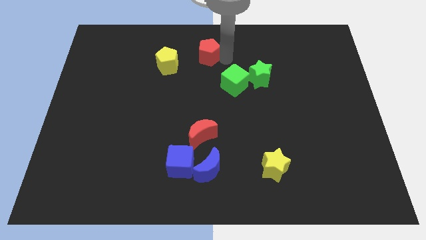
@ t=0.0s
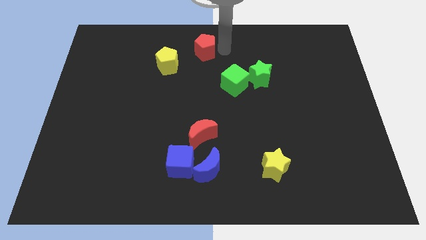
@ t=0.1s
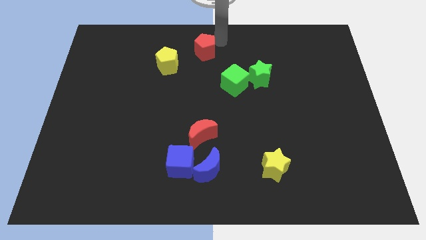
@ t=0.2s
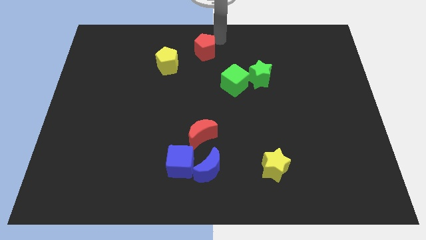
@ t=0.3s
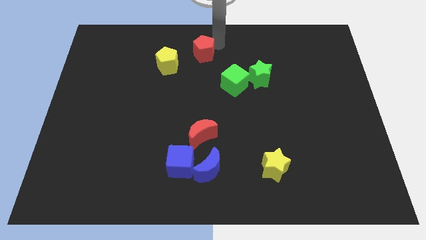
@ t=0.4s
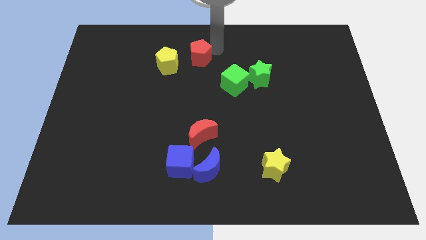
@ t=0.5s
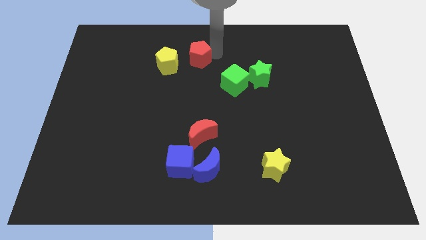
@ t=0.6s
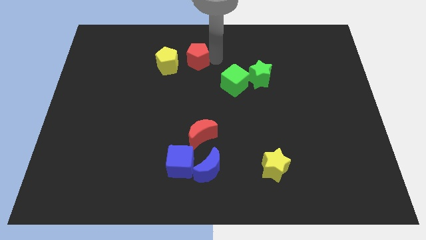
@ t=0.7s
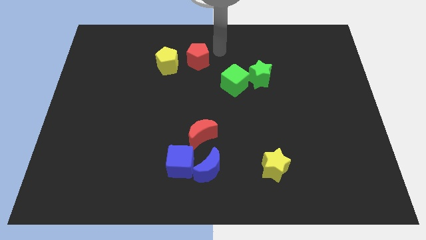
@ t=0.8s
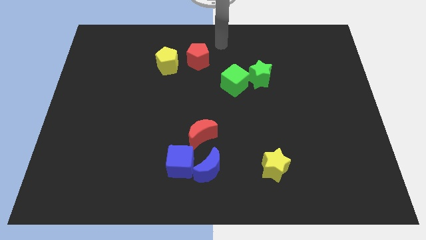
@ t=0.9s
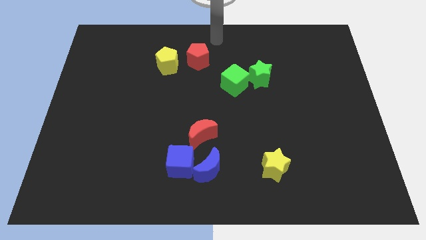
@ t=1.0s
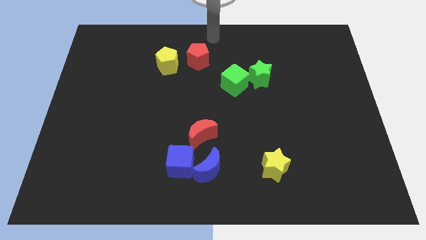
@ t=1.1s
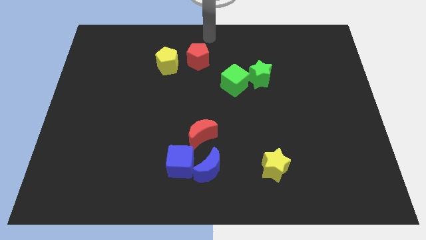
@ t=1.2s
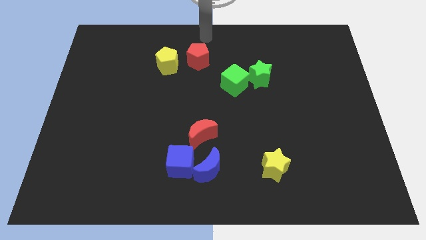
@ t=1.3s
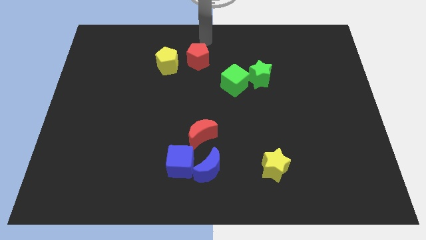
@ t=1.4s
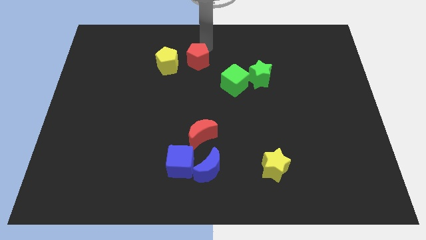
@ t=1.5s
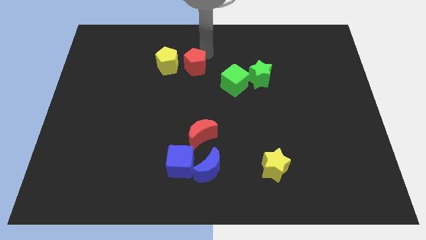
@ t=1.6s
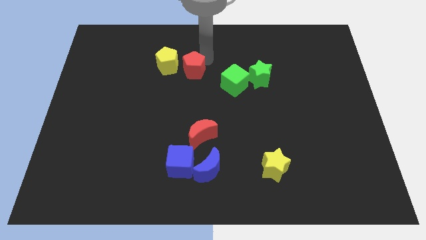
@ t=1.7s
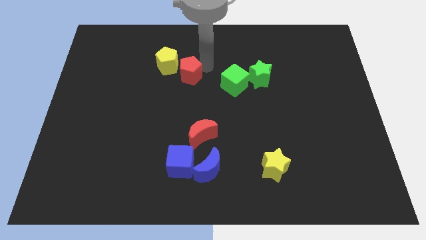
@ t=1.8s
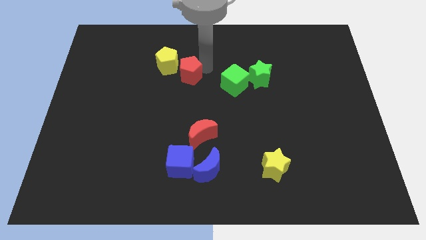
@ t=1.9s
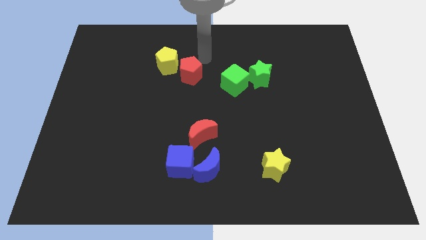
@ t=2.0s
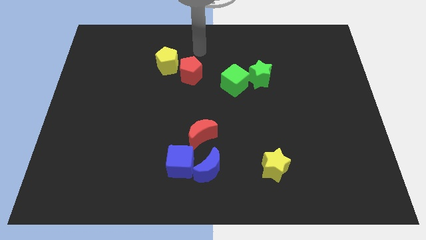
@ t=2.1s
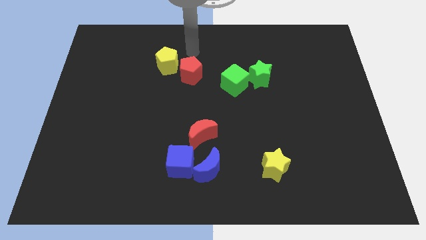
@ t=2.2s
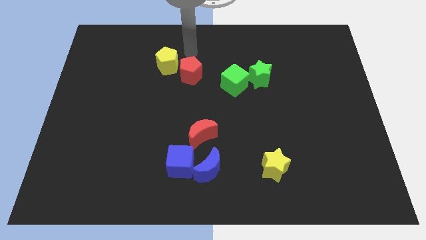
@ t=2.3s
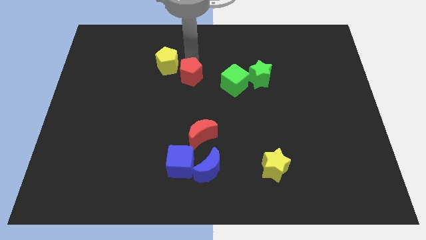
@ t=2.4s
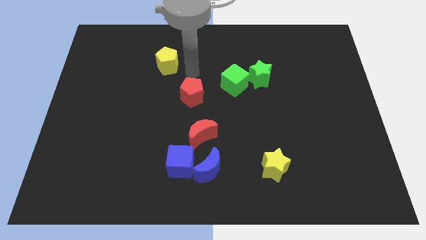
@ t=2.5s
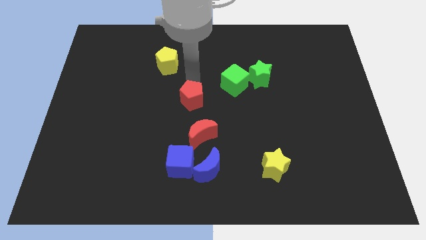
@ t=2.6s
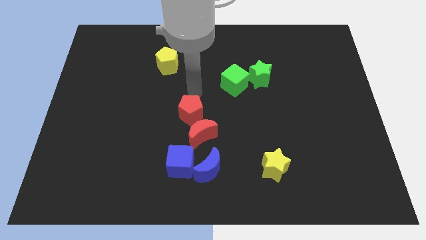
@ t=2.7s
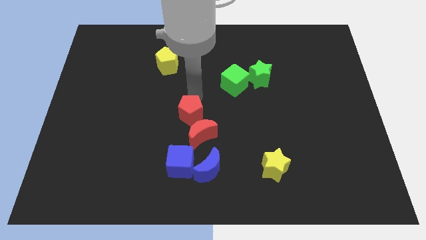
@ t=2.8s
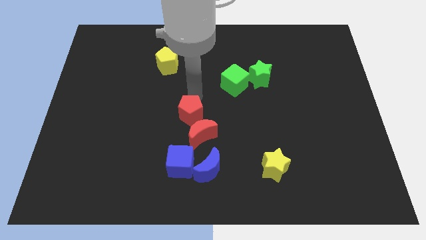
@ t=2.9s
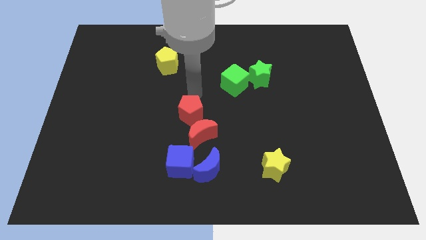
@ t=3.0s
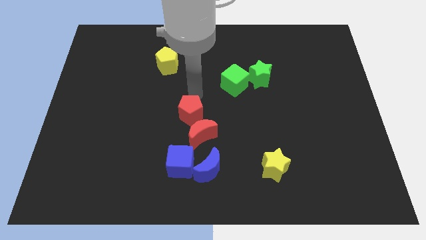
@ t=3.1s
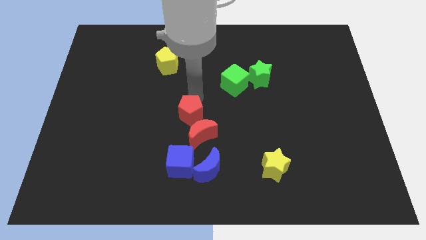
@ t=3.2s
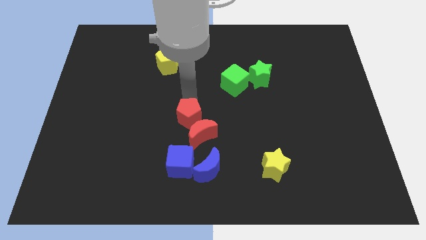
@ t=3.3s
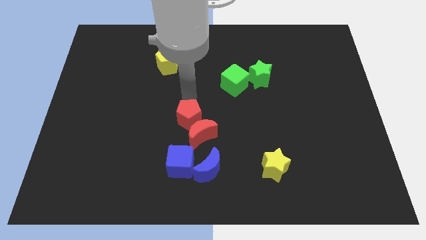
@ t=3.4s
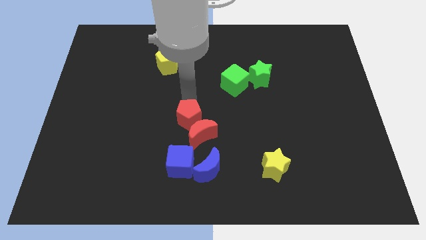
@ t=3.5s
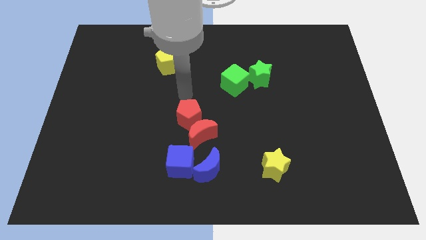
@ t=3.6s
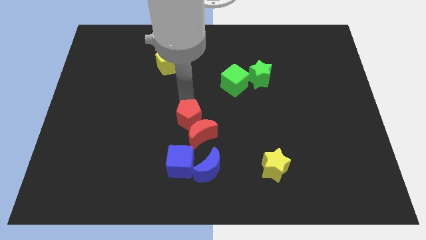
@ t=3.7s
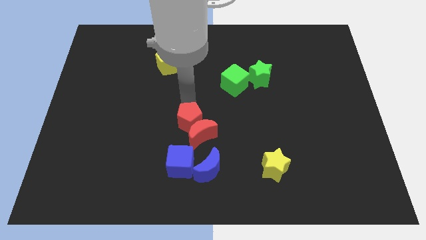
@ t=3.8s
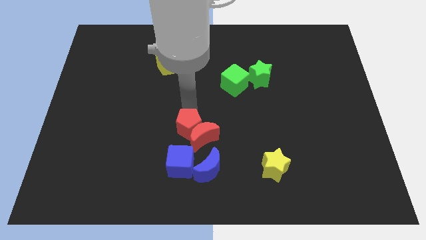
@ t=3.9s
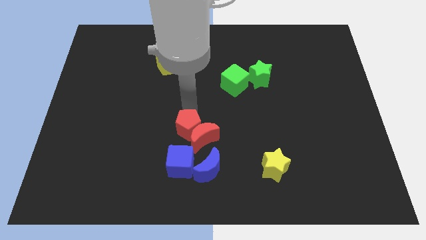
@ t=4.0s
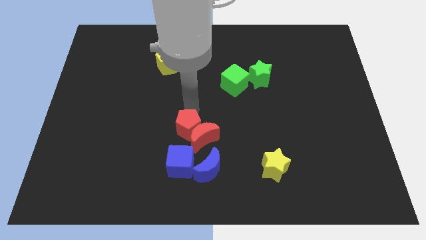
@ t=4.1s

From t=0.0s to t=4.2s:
push the red pentagon into the red moon

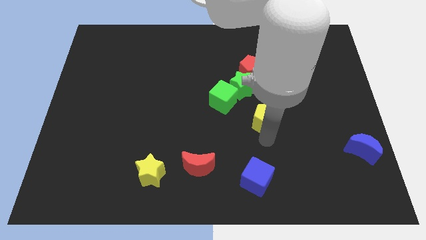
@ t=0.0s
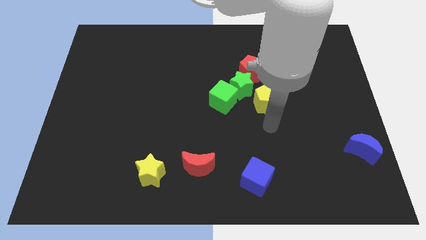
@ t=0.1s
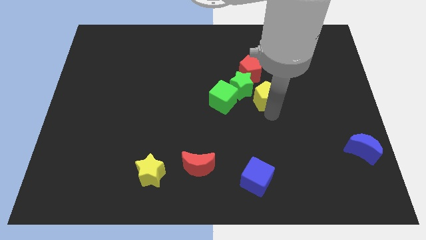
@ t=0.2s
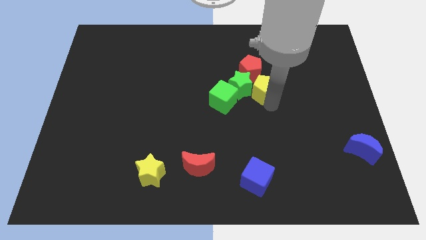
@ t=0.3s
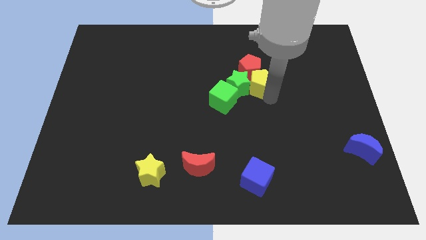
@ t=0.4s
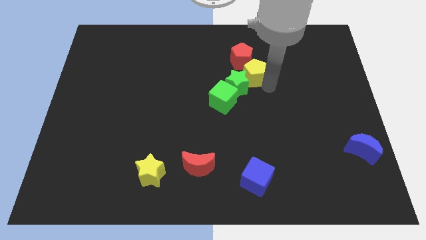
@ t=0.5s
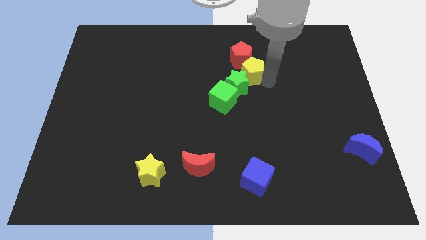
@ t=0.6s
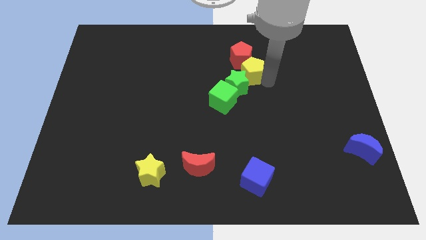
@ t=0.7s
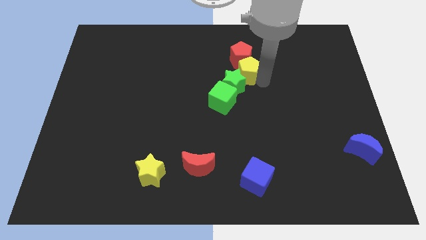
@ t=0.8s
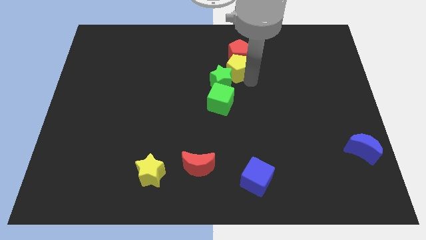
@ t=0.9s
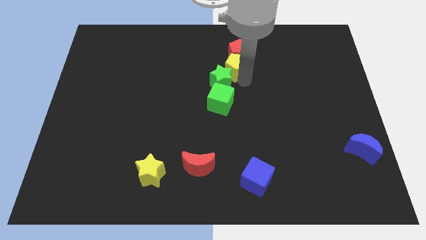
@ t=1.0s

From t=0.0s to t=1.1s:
place the yellow pentagon below the red pentagon

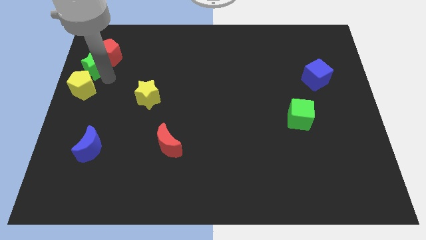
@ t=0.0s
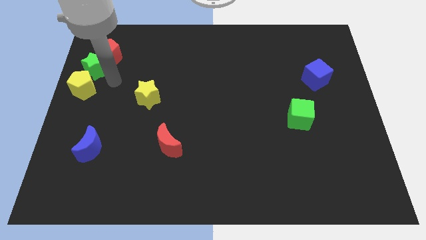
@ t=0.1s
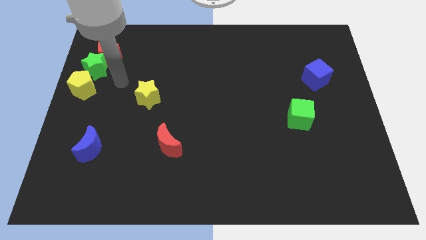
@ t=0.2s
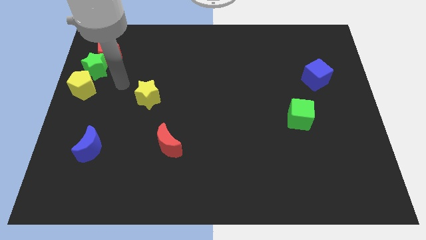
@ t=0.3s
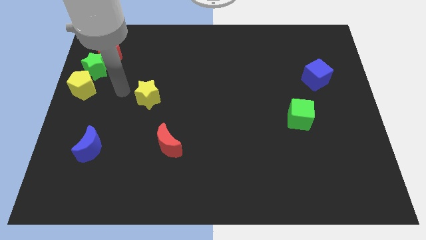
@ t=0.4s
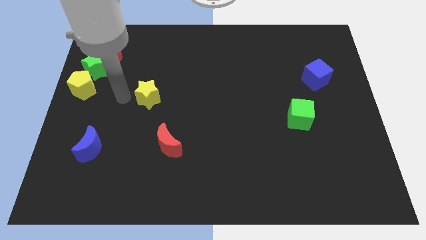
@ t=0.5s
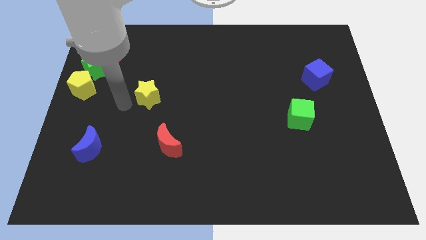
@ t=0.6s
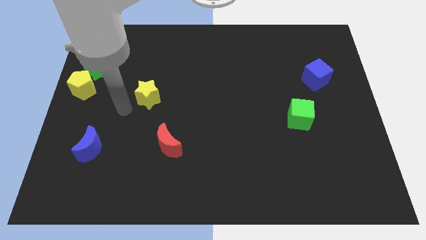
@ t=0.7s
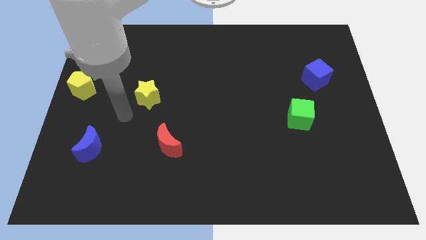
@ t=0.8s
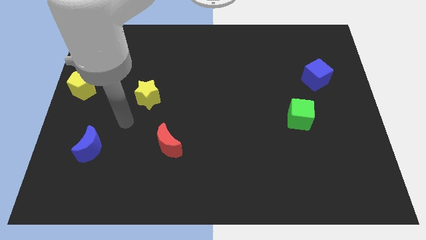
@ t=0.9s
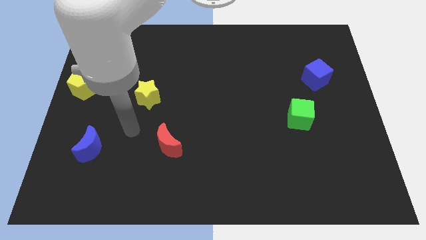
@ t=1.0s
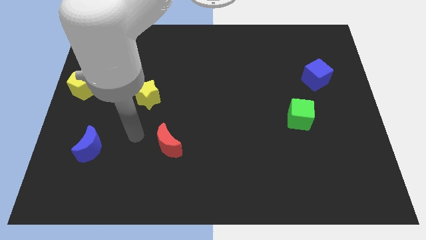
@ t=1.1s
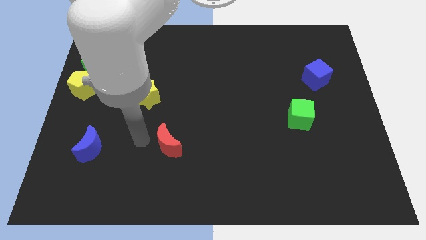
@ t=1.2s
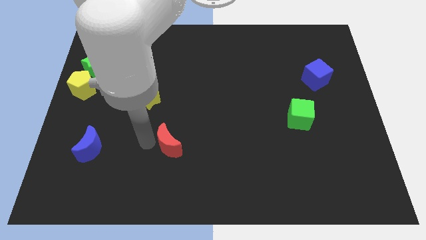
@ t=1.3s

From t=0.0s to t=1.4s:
go to the left side of the red crescent

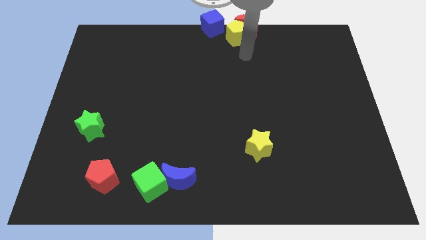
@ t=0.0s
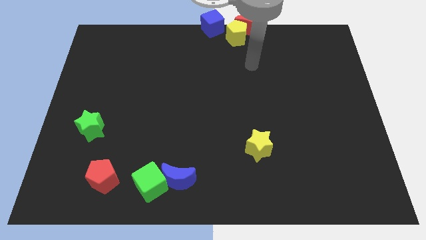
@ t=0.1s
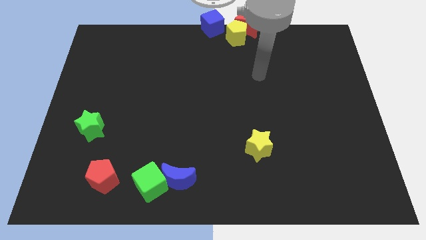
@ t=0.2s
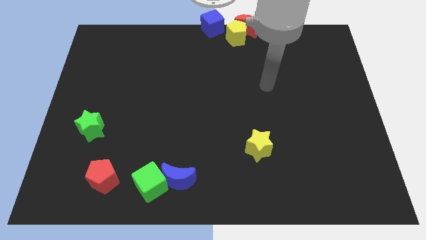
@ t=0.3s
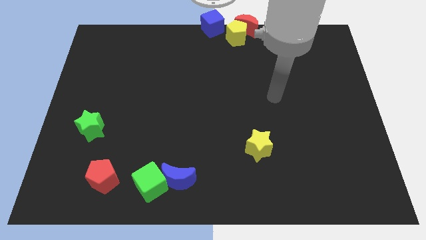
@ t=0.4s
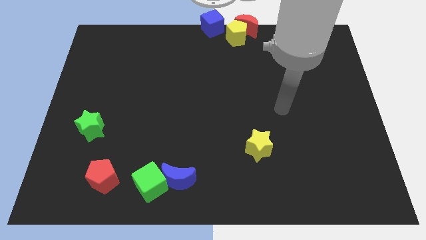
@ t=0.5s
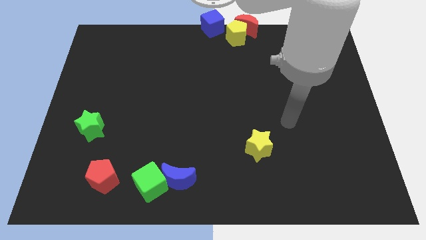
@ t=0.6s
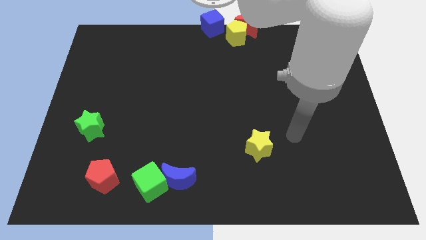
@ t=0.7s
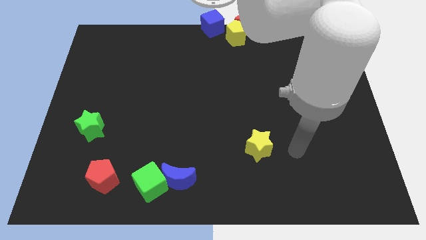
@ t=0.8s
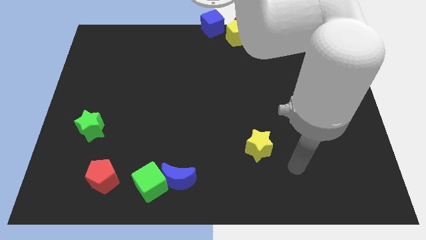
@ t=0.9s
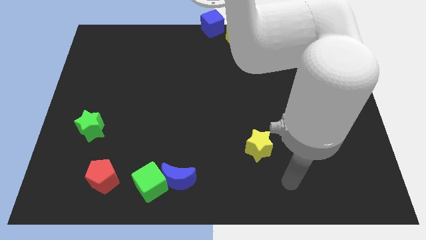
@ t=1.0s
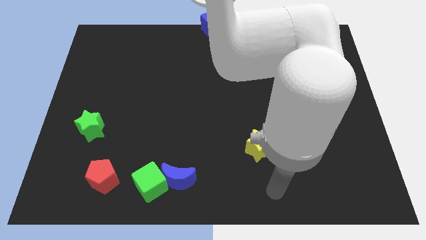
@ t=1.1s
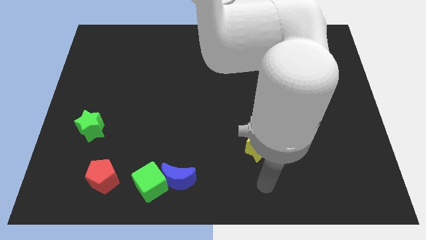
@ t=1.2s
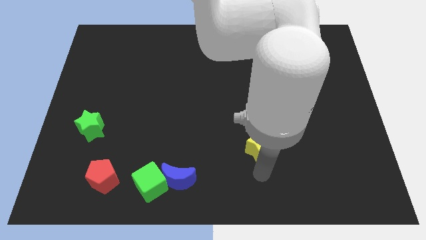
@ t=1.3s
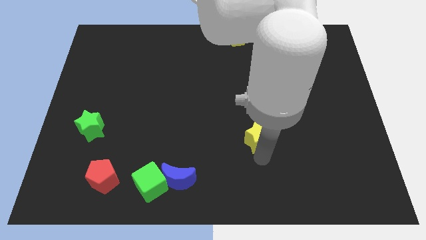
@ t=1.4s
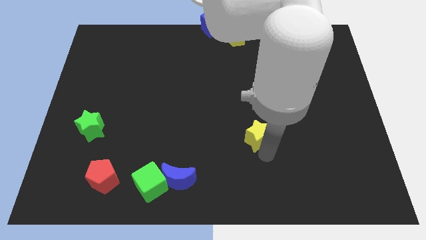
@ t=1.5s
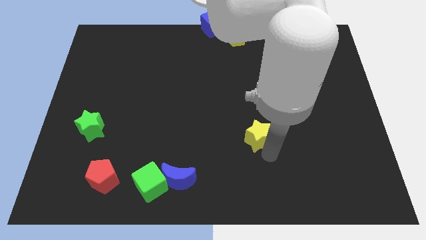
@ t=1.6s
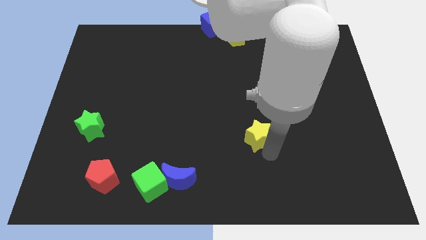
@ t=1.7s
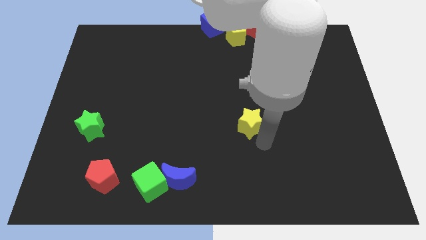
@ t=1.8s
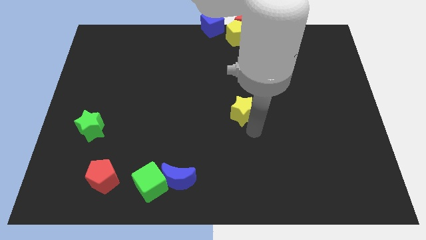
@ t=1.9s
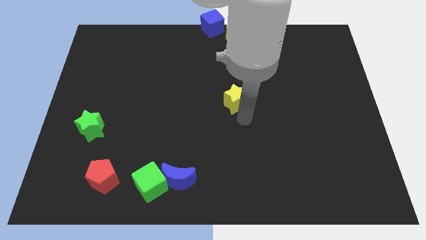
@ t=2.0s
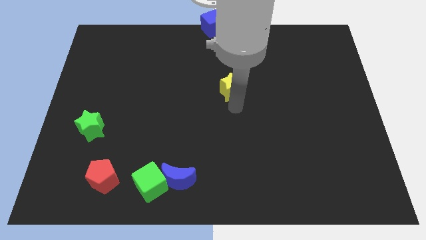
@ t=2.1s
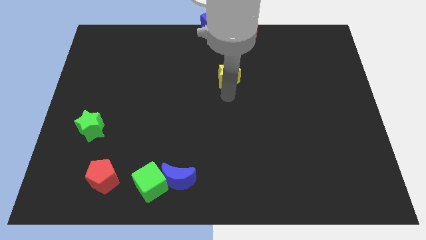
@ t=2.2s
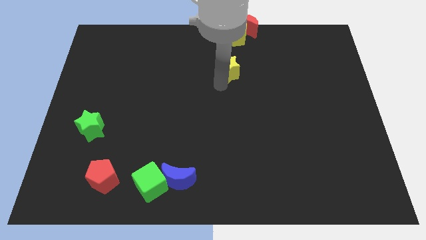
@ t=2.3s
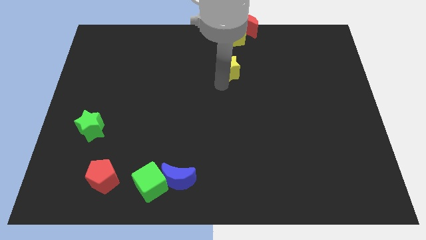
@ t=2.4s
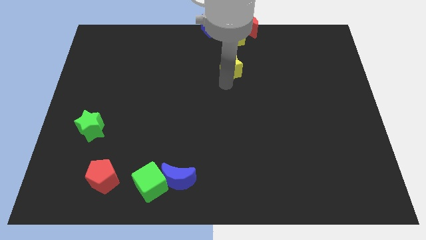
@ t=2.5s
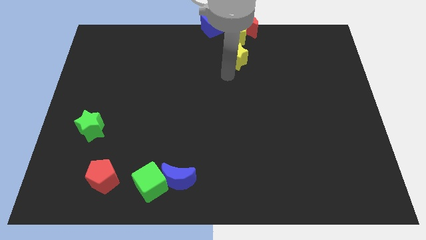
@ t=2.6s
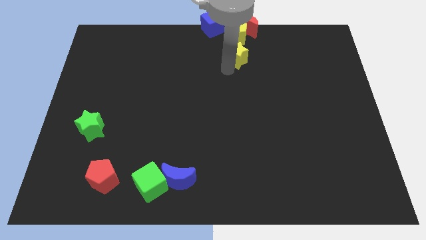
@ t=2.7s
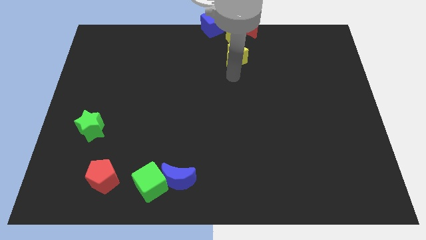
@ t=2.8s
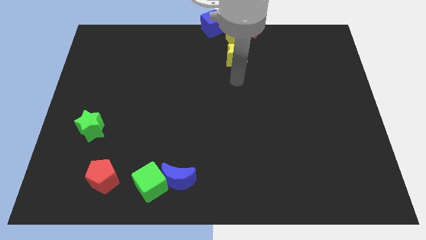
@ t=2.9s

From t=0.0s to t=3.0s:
place the yellow star down to the yellow pentagon
